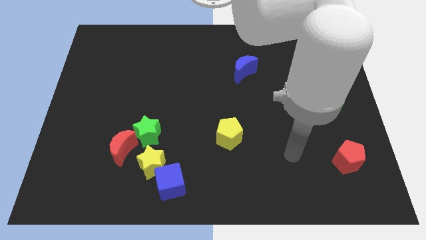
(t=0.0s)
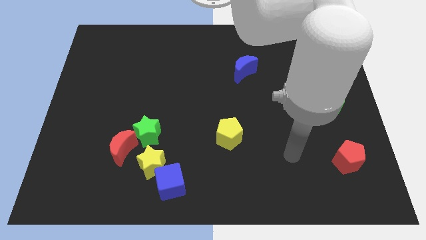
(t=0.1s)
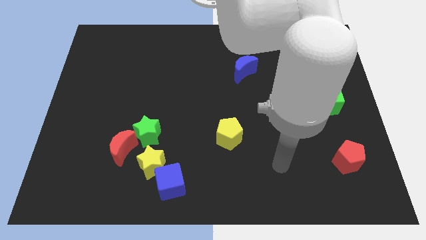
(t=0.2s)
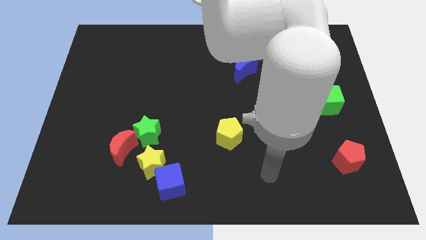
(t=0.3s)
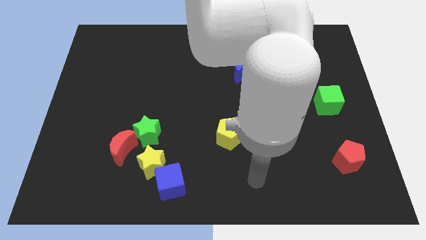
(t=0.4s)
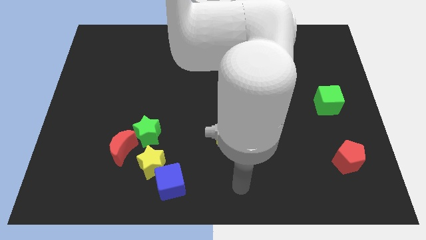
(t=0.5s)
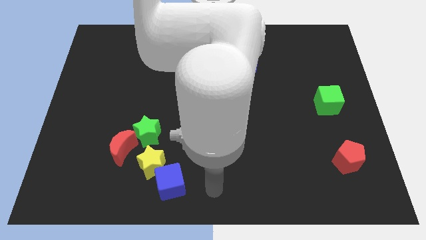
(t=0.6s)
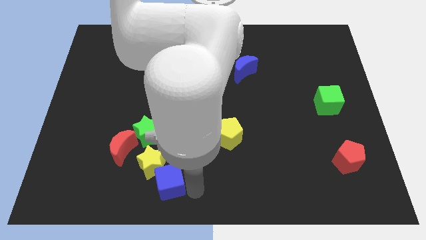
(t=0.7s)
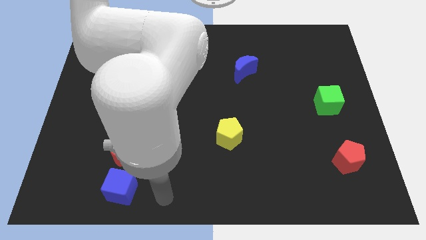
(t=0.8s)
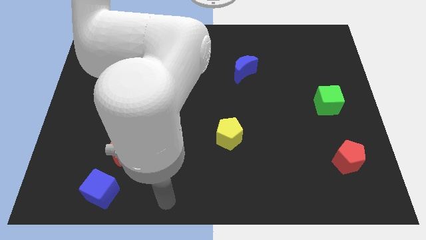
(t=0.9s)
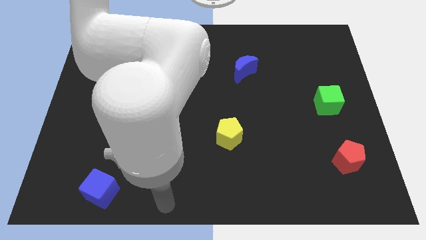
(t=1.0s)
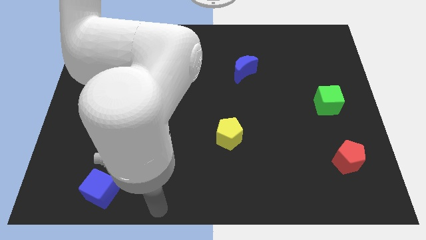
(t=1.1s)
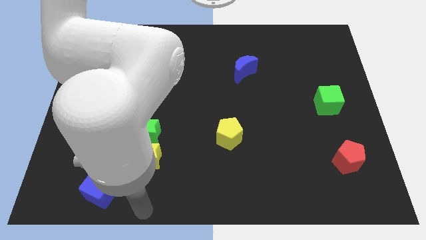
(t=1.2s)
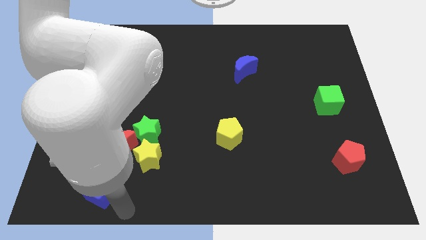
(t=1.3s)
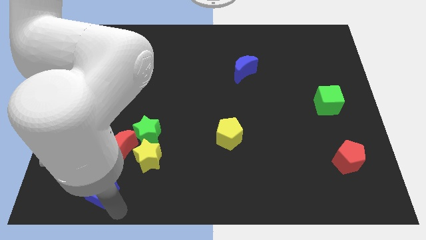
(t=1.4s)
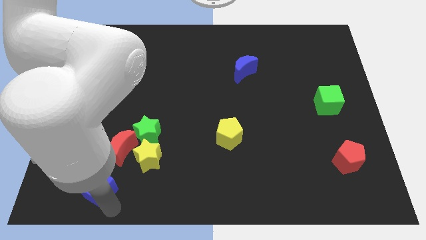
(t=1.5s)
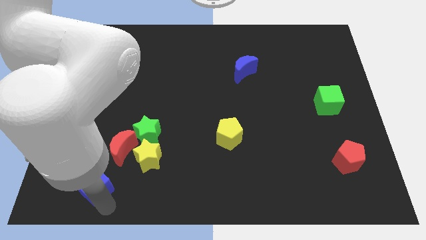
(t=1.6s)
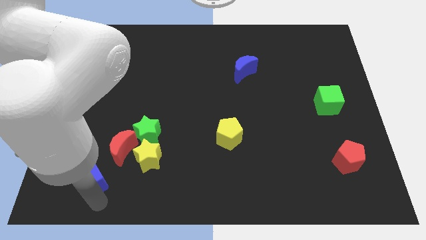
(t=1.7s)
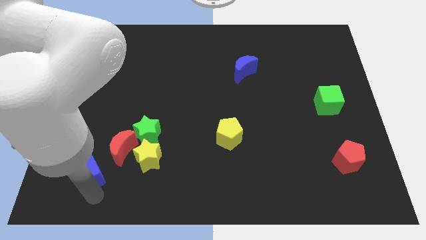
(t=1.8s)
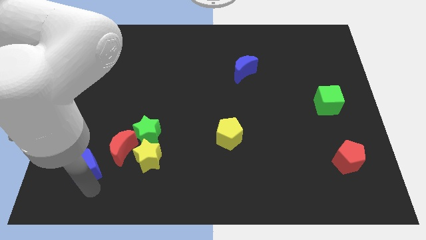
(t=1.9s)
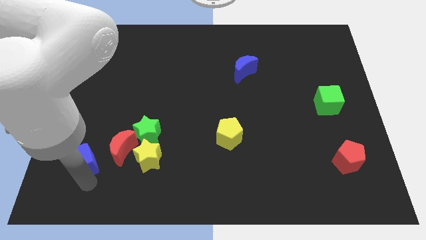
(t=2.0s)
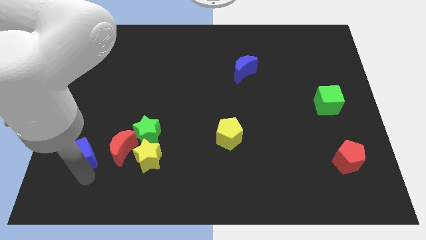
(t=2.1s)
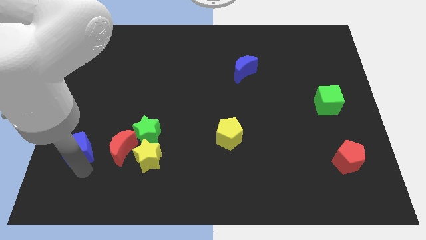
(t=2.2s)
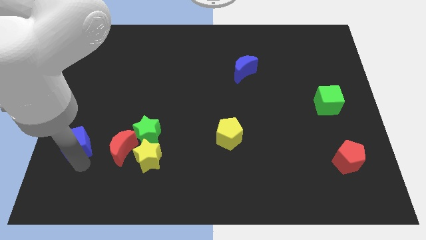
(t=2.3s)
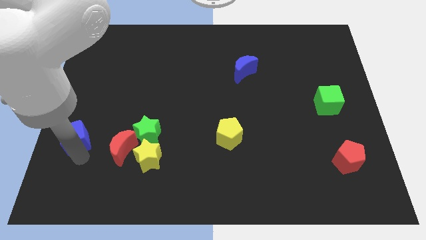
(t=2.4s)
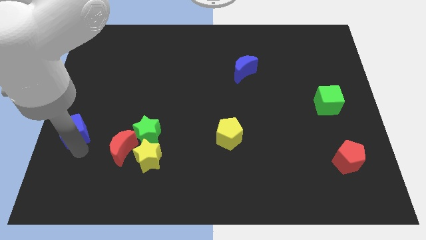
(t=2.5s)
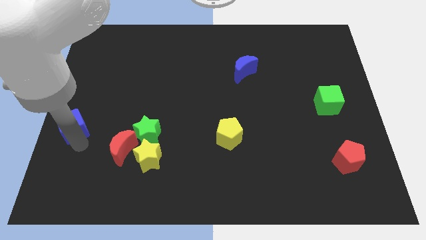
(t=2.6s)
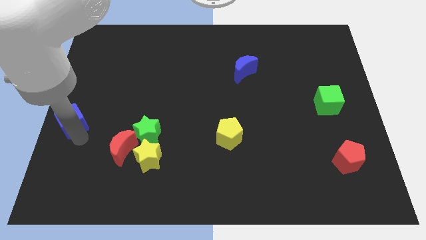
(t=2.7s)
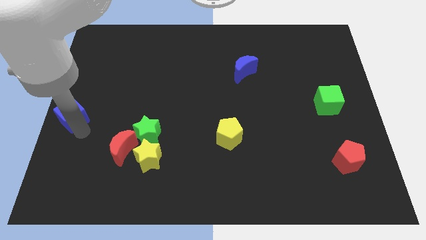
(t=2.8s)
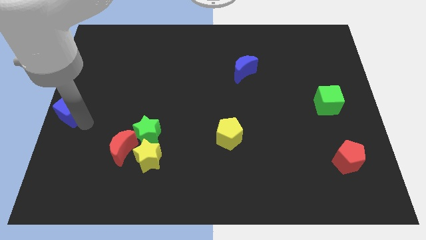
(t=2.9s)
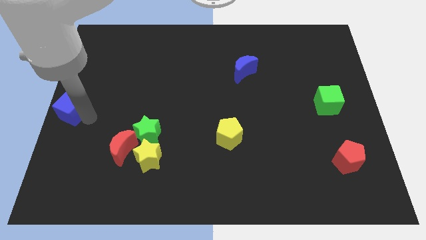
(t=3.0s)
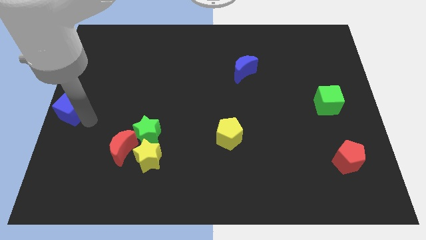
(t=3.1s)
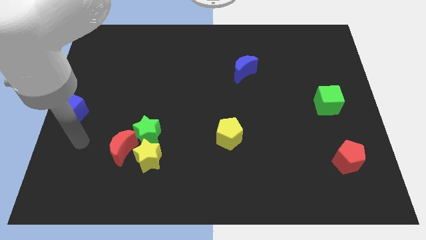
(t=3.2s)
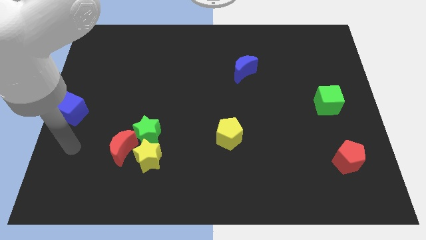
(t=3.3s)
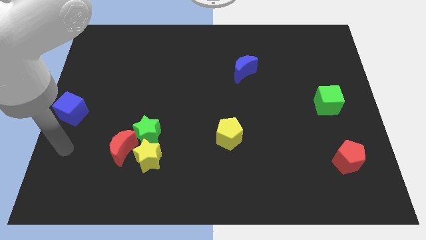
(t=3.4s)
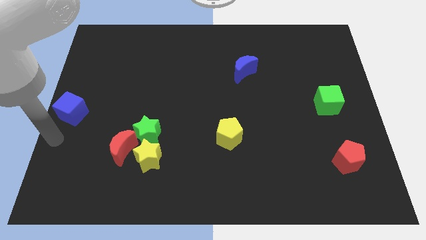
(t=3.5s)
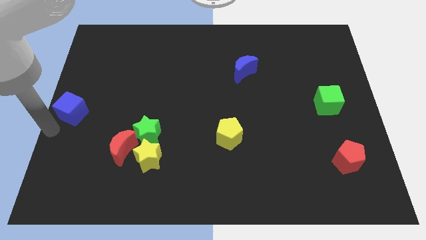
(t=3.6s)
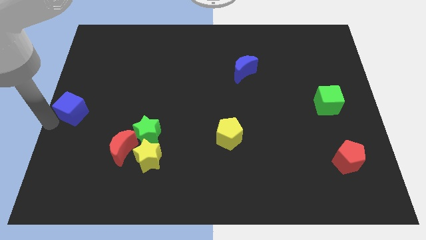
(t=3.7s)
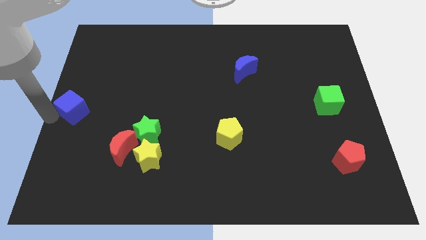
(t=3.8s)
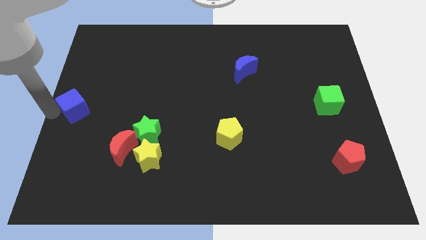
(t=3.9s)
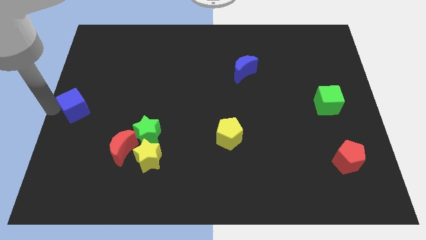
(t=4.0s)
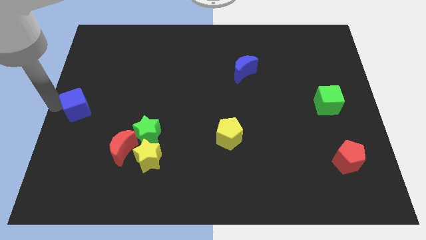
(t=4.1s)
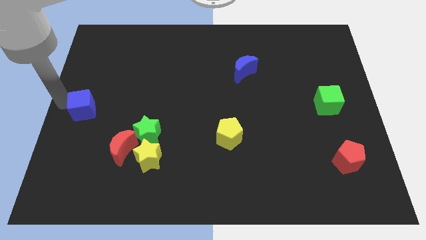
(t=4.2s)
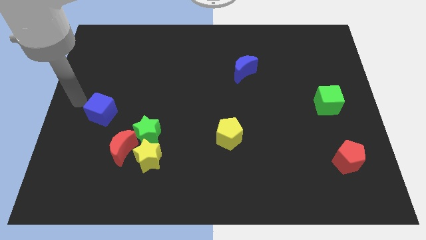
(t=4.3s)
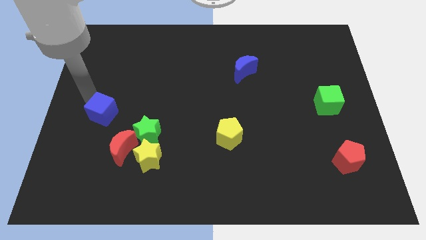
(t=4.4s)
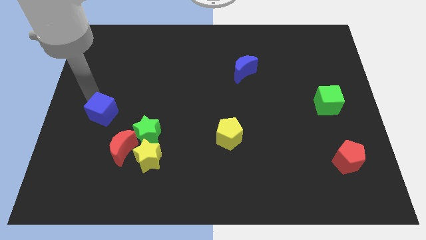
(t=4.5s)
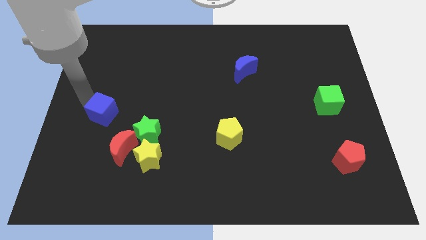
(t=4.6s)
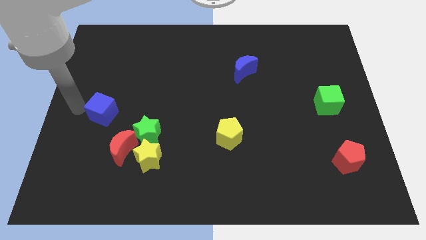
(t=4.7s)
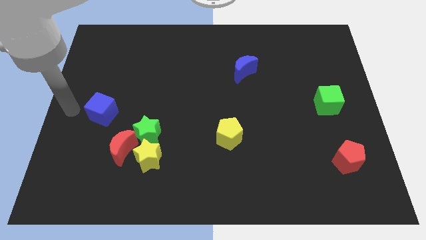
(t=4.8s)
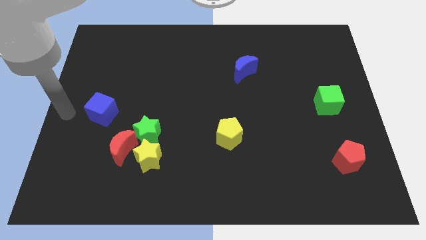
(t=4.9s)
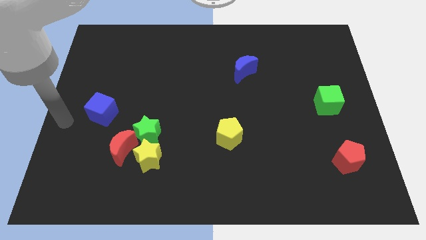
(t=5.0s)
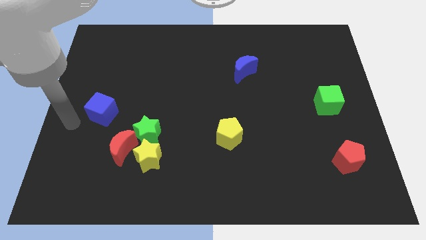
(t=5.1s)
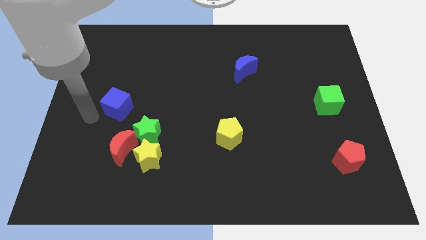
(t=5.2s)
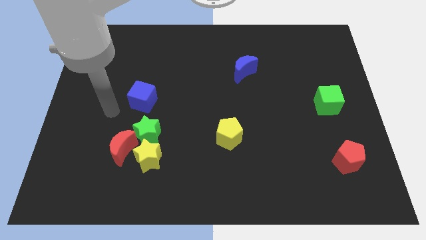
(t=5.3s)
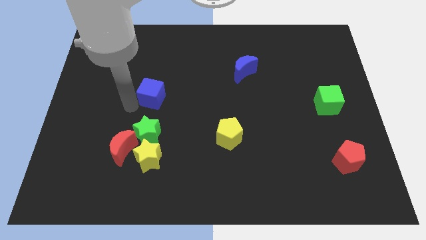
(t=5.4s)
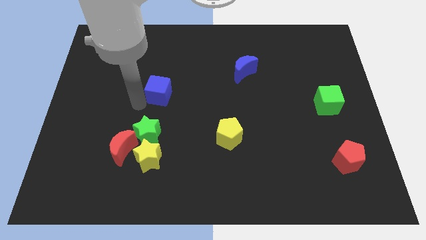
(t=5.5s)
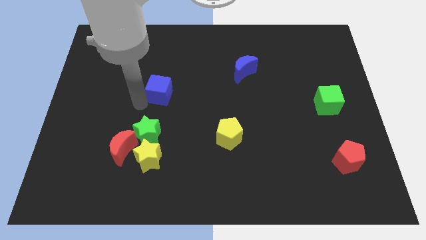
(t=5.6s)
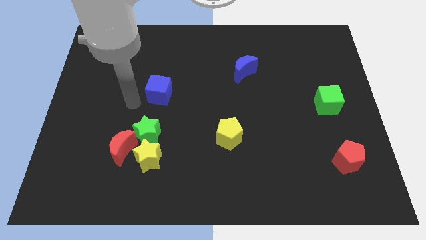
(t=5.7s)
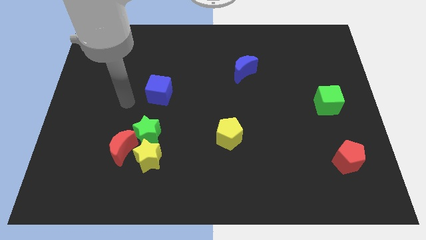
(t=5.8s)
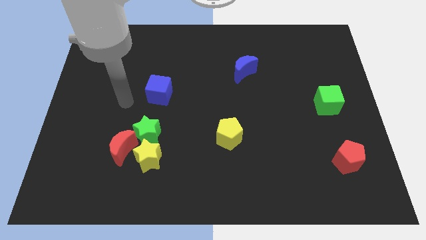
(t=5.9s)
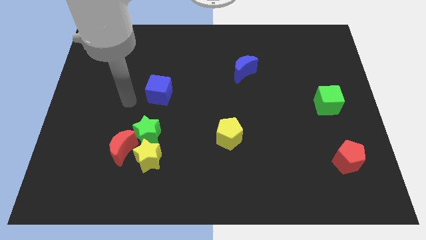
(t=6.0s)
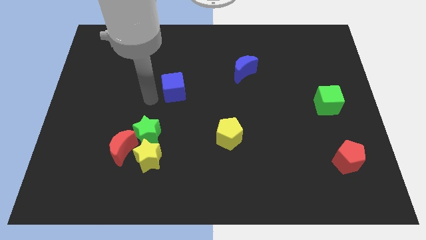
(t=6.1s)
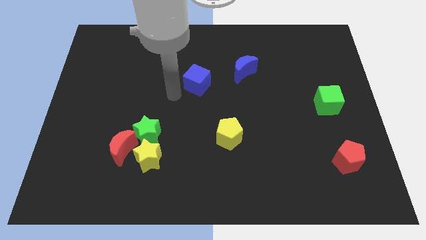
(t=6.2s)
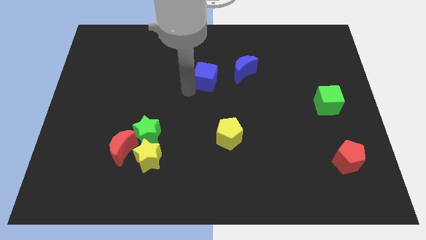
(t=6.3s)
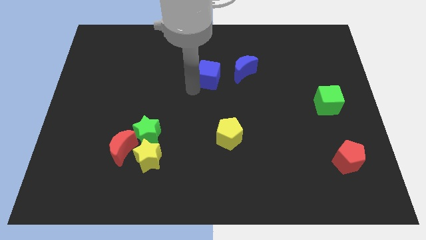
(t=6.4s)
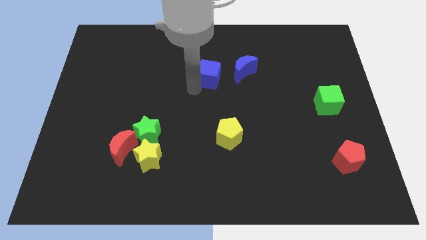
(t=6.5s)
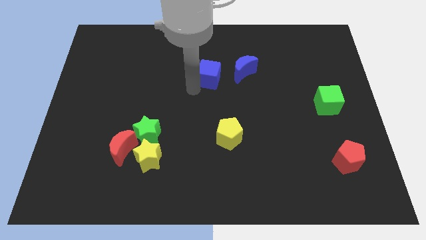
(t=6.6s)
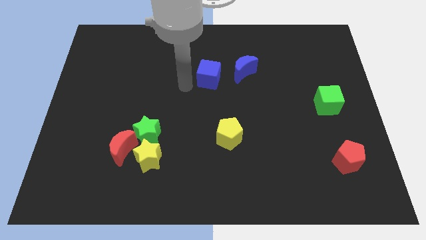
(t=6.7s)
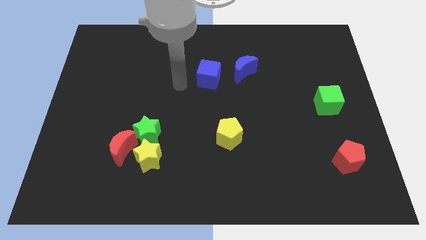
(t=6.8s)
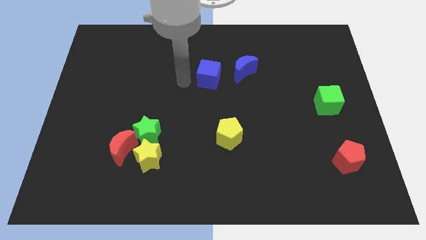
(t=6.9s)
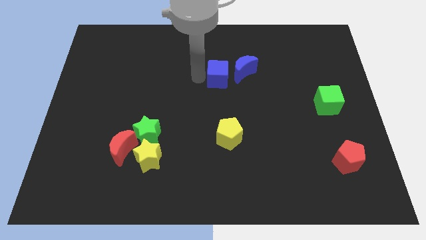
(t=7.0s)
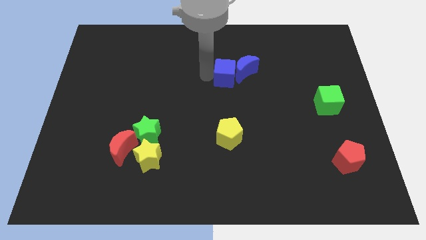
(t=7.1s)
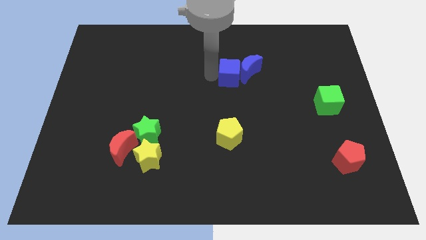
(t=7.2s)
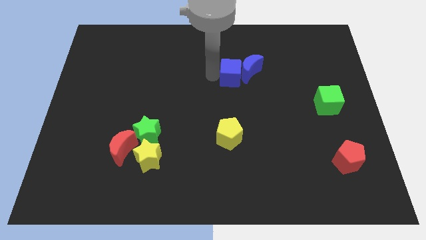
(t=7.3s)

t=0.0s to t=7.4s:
push the blue cube next to the blue moon

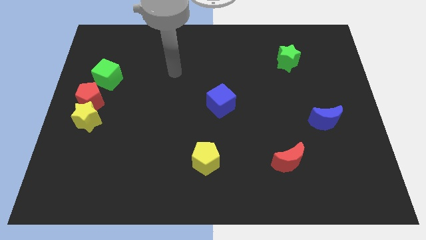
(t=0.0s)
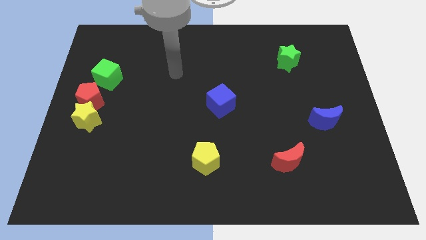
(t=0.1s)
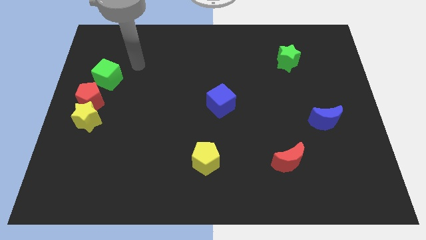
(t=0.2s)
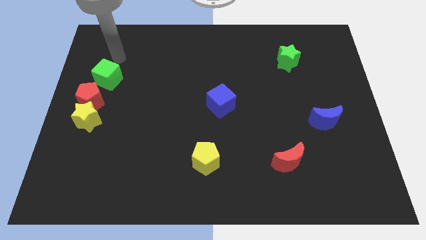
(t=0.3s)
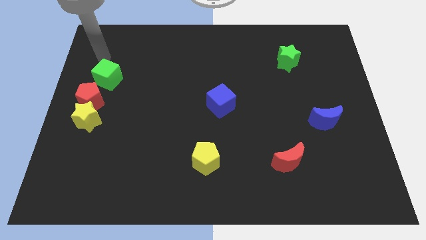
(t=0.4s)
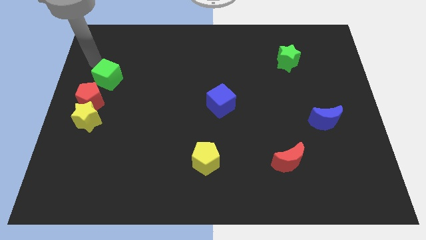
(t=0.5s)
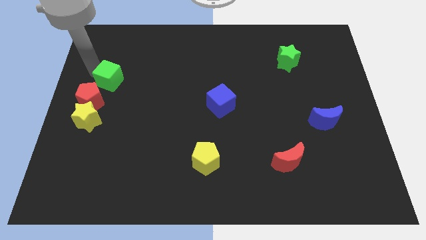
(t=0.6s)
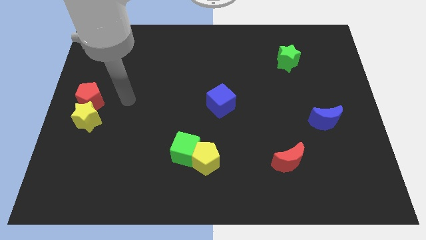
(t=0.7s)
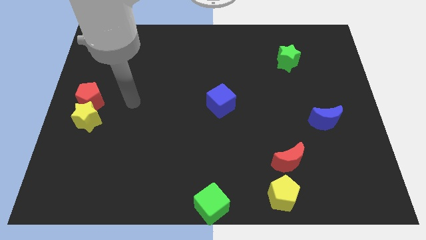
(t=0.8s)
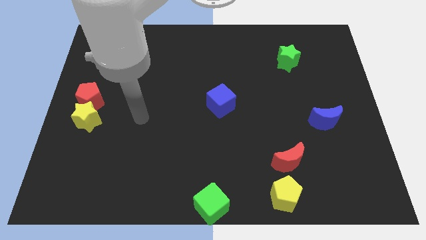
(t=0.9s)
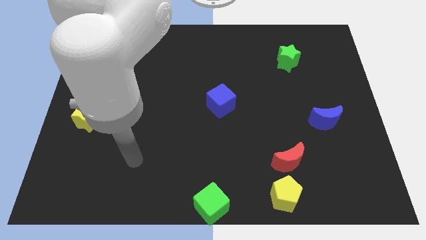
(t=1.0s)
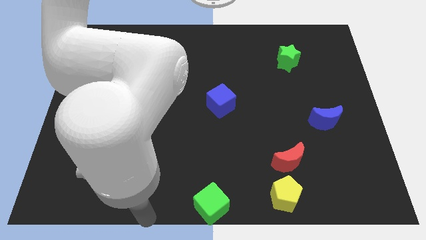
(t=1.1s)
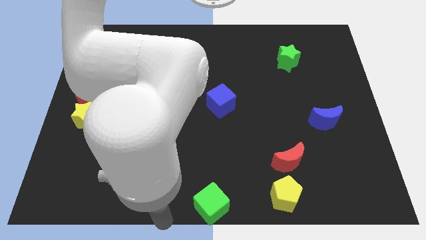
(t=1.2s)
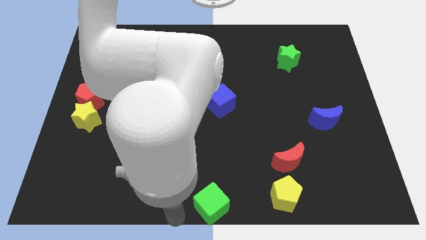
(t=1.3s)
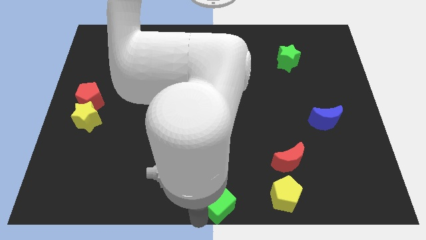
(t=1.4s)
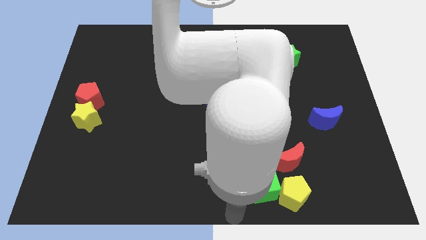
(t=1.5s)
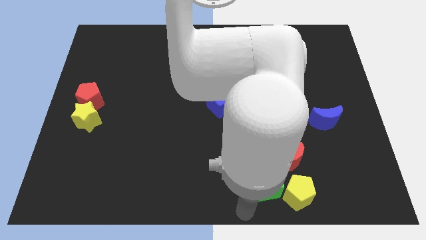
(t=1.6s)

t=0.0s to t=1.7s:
slide the green cube next to the yellow pentagon
